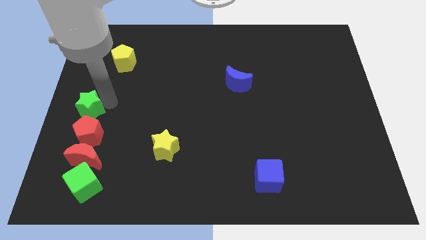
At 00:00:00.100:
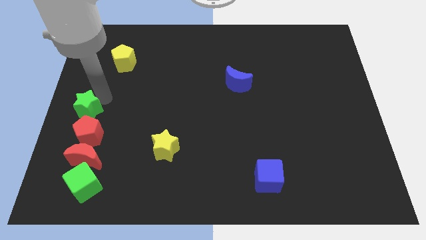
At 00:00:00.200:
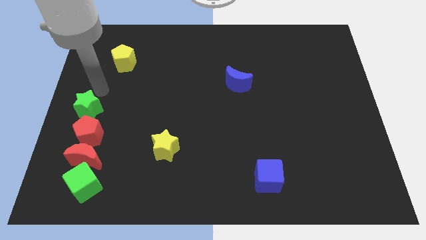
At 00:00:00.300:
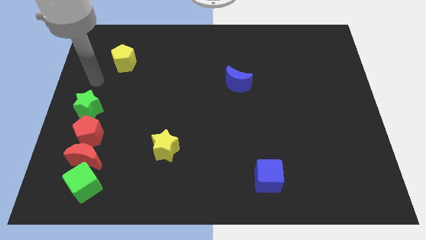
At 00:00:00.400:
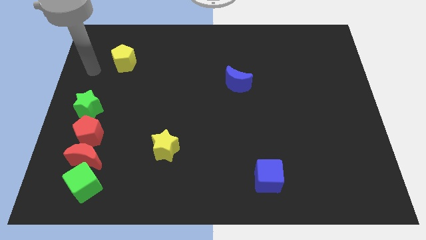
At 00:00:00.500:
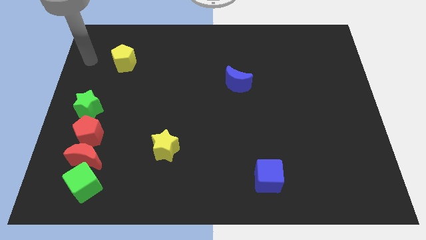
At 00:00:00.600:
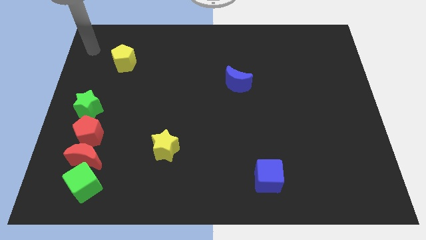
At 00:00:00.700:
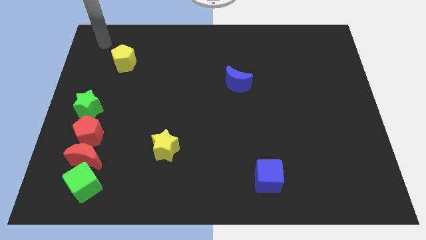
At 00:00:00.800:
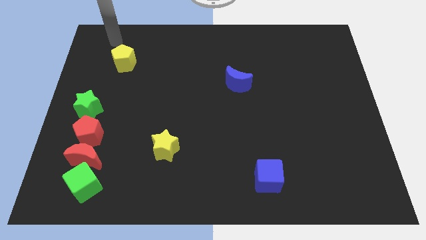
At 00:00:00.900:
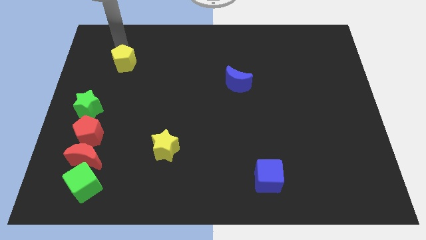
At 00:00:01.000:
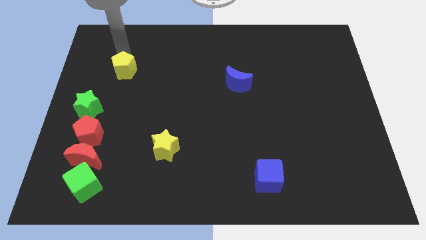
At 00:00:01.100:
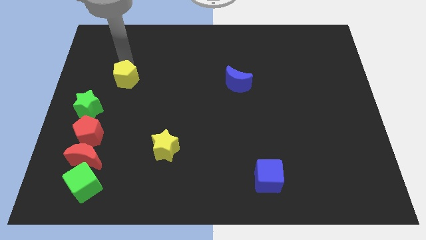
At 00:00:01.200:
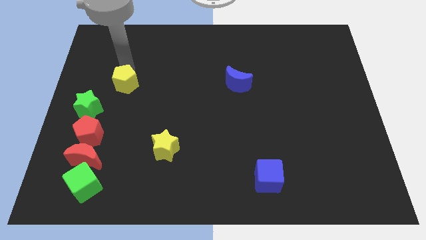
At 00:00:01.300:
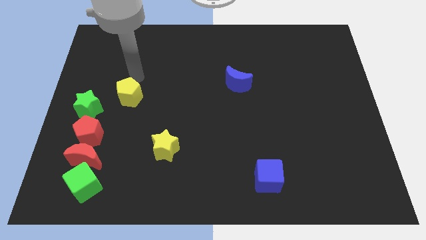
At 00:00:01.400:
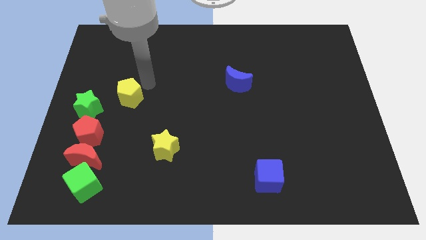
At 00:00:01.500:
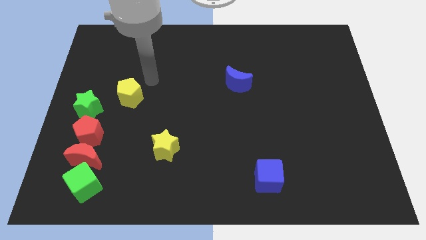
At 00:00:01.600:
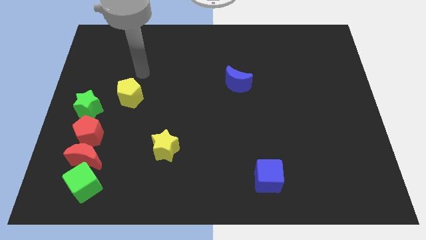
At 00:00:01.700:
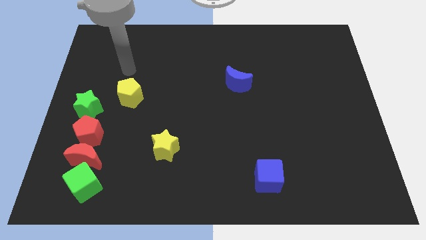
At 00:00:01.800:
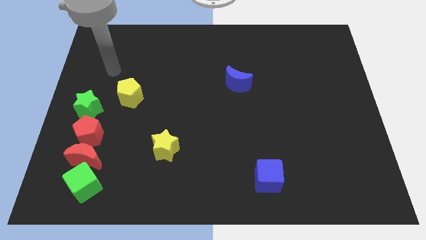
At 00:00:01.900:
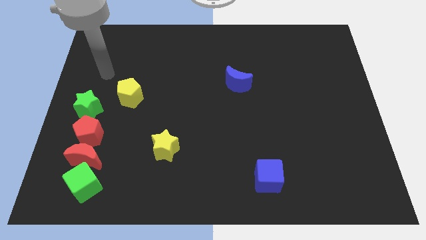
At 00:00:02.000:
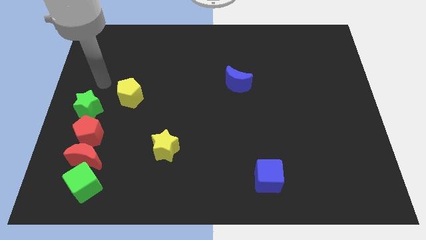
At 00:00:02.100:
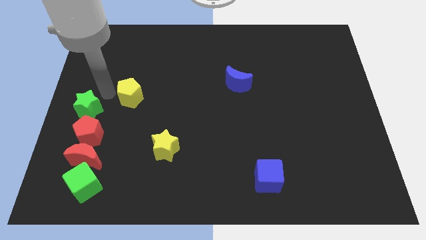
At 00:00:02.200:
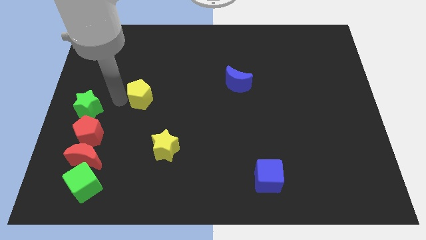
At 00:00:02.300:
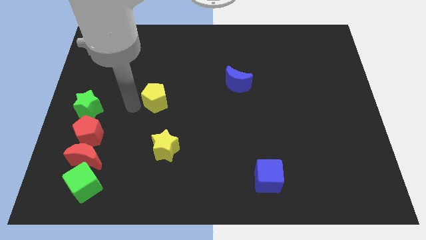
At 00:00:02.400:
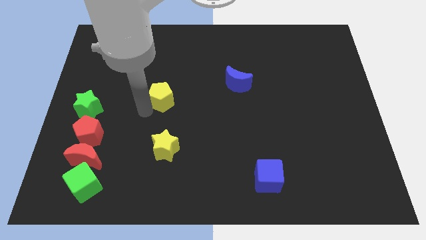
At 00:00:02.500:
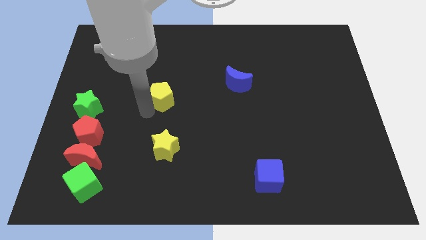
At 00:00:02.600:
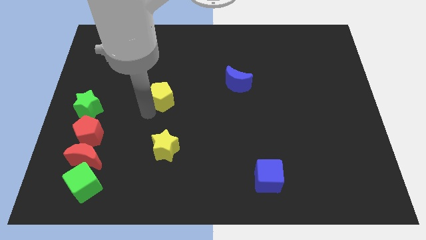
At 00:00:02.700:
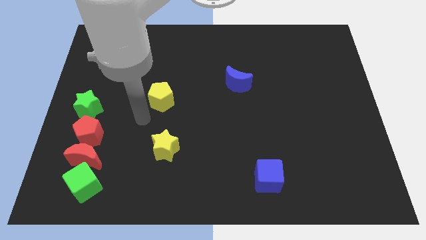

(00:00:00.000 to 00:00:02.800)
push the yellow pentagon to the top of the yellow star

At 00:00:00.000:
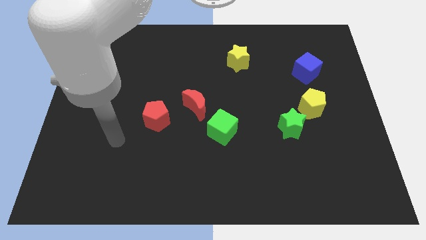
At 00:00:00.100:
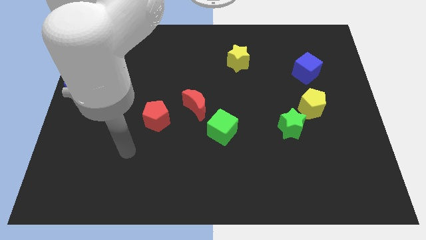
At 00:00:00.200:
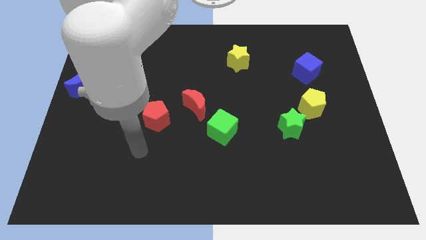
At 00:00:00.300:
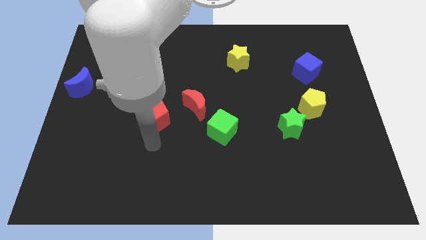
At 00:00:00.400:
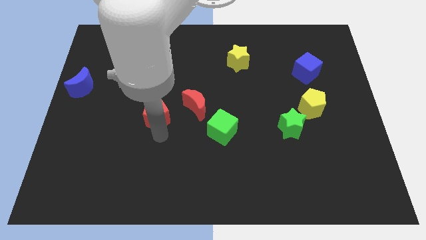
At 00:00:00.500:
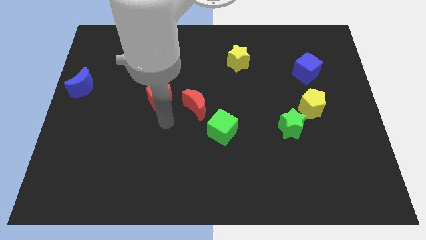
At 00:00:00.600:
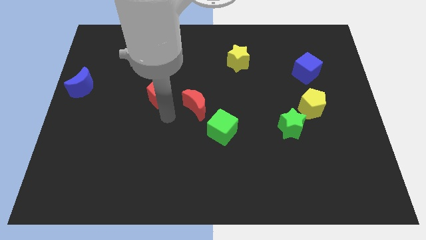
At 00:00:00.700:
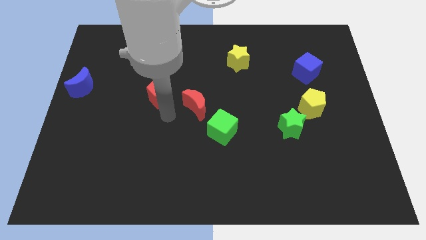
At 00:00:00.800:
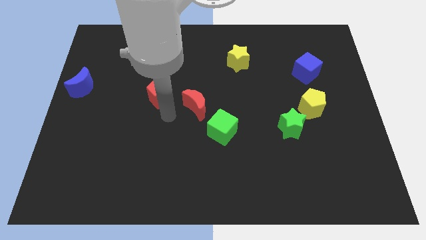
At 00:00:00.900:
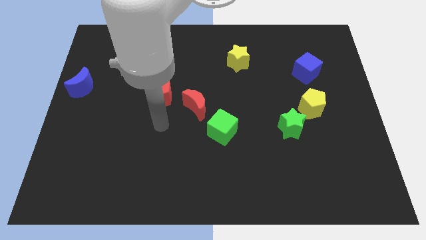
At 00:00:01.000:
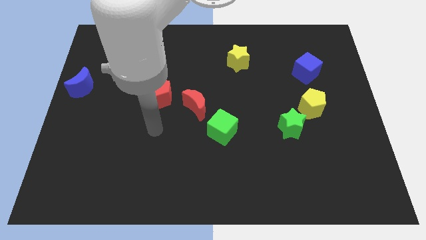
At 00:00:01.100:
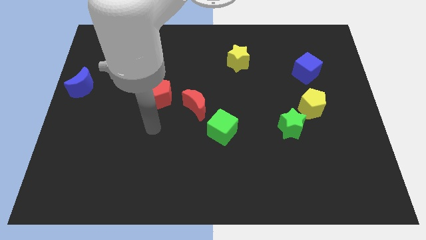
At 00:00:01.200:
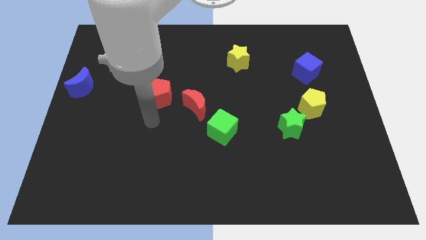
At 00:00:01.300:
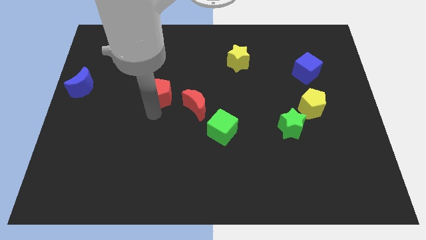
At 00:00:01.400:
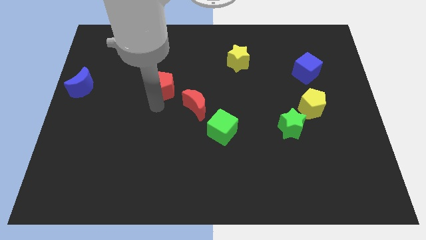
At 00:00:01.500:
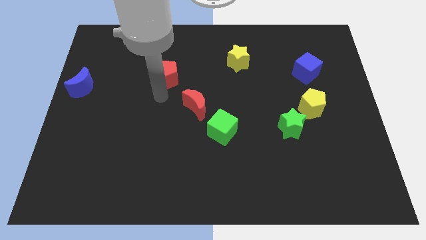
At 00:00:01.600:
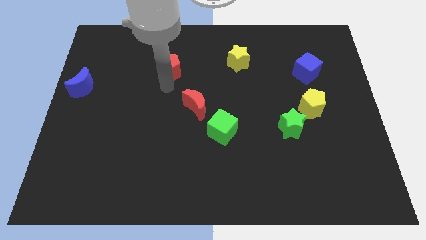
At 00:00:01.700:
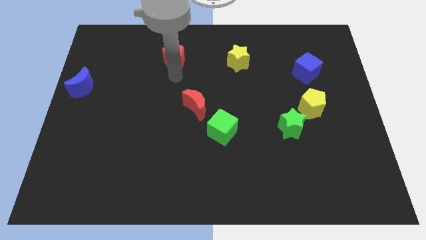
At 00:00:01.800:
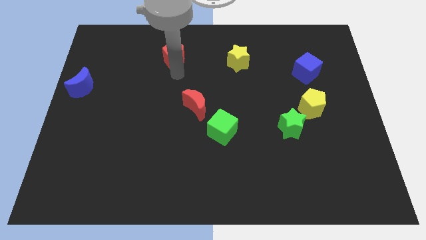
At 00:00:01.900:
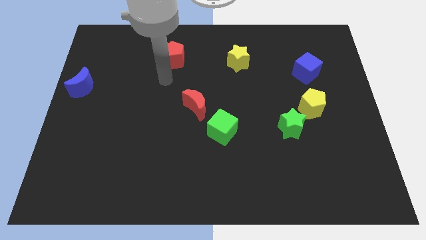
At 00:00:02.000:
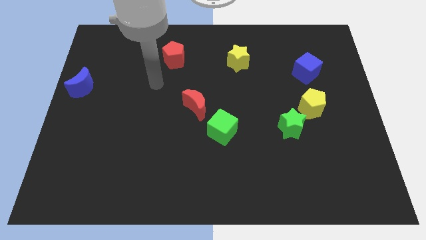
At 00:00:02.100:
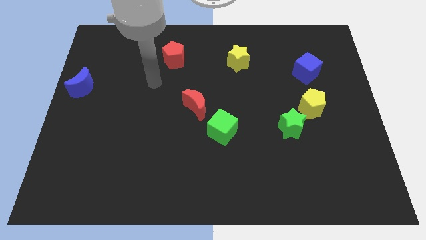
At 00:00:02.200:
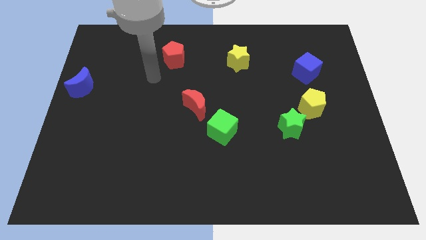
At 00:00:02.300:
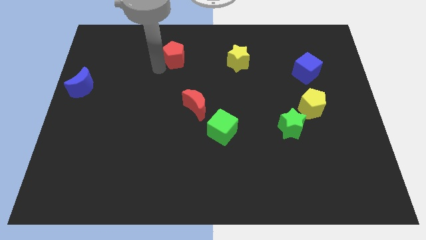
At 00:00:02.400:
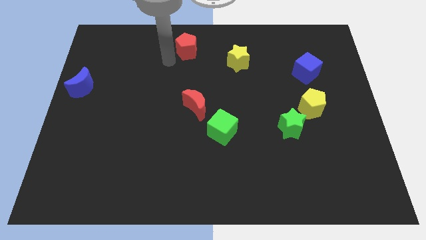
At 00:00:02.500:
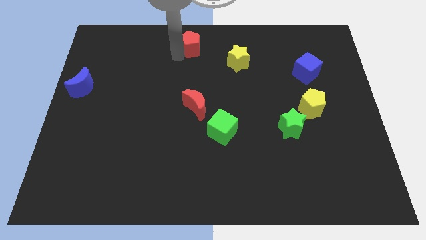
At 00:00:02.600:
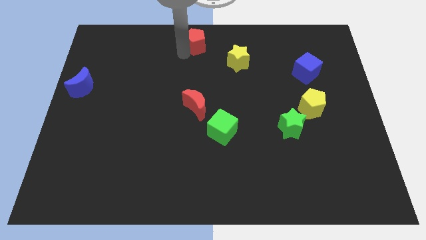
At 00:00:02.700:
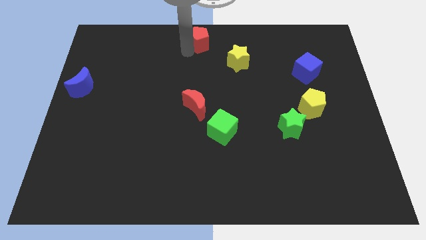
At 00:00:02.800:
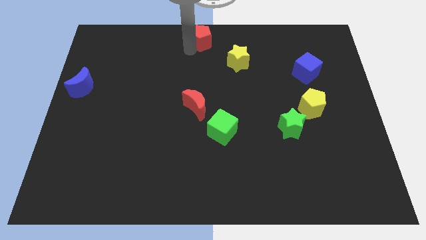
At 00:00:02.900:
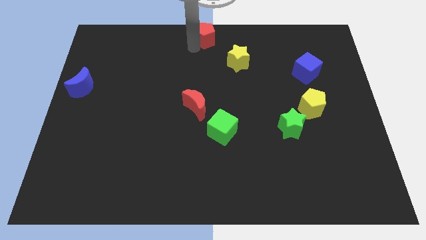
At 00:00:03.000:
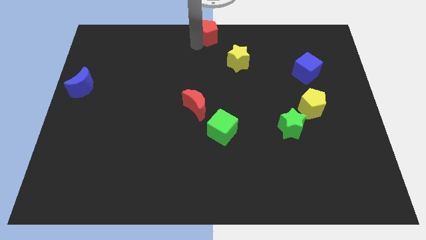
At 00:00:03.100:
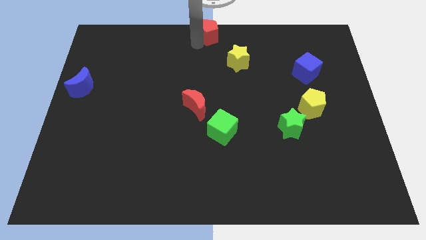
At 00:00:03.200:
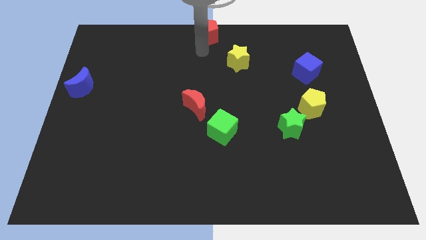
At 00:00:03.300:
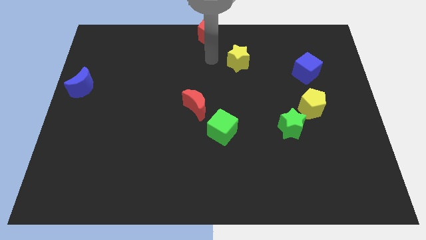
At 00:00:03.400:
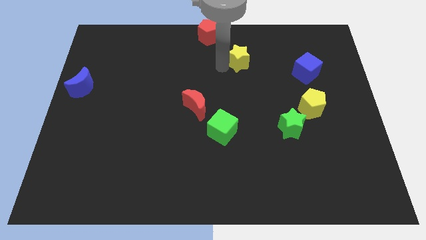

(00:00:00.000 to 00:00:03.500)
push the red pentagon to the top center

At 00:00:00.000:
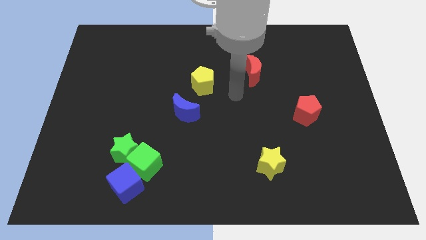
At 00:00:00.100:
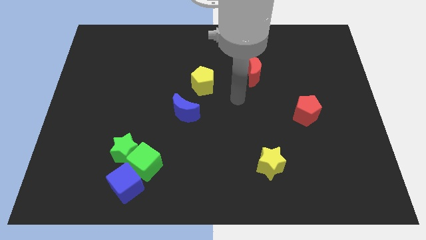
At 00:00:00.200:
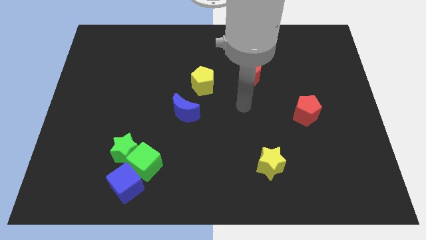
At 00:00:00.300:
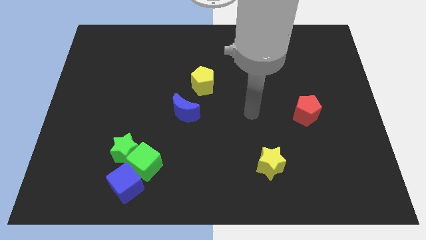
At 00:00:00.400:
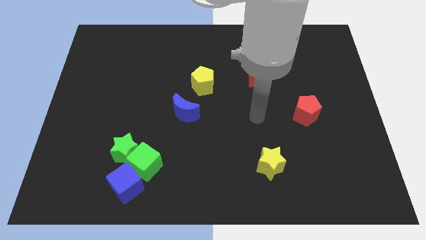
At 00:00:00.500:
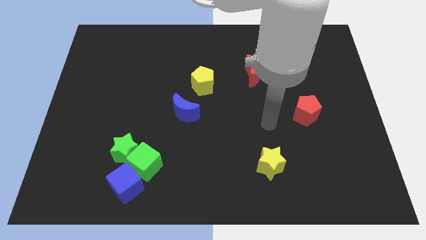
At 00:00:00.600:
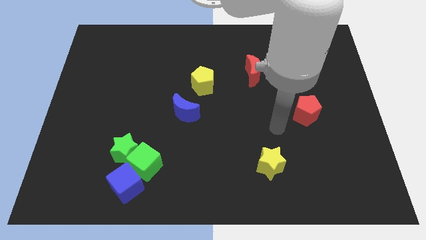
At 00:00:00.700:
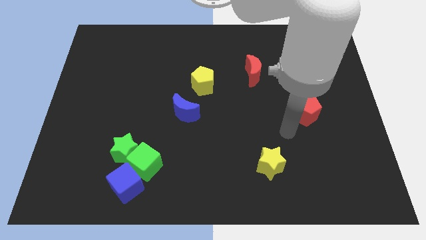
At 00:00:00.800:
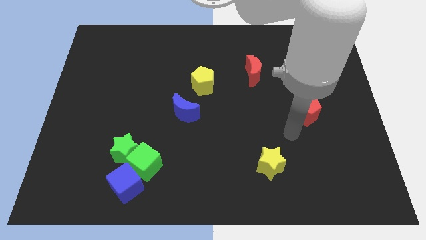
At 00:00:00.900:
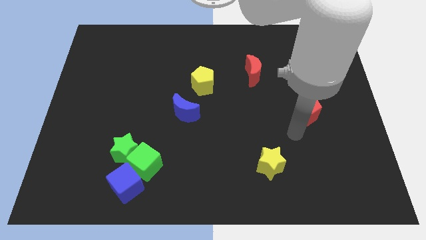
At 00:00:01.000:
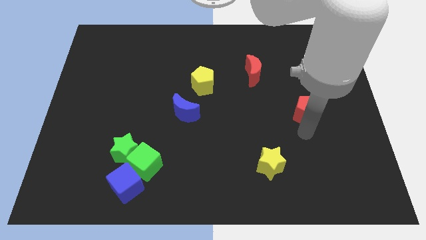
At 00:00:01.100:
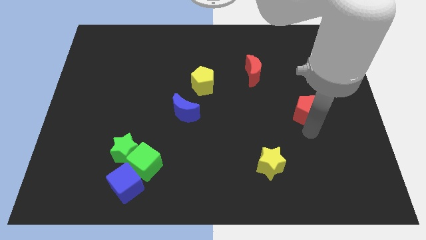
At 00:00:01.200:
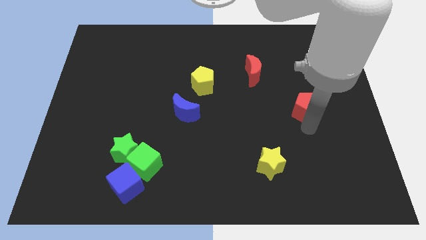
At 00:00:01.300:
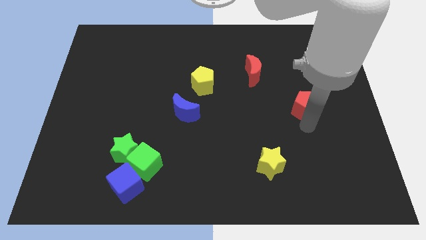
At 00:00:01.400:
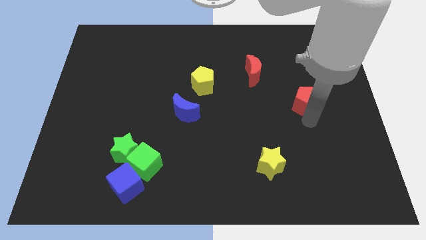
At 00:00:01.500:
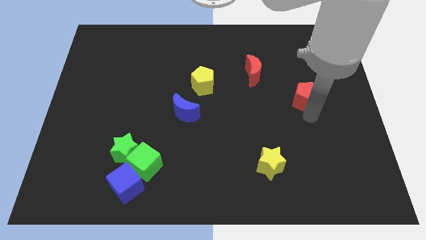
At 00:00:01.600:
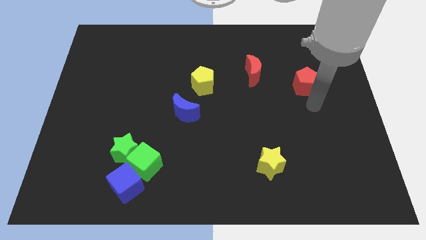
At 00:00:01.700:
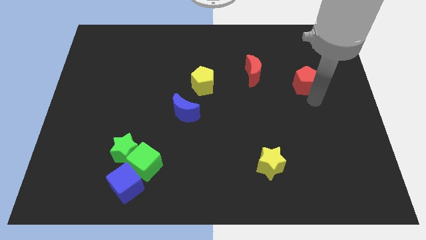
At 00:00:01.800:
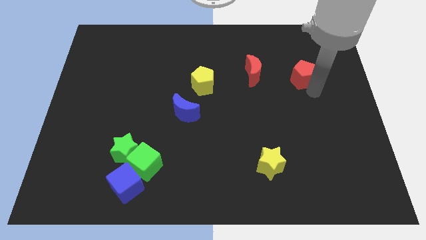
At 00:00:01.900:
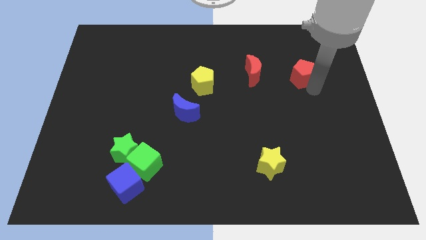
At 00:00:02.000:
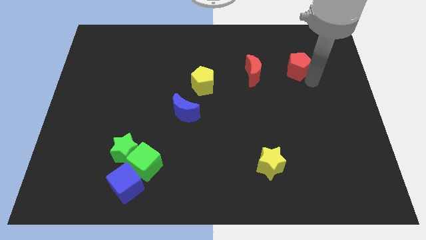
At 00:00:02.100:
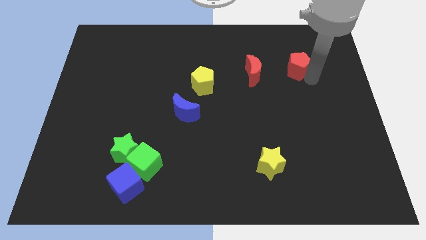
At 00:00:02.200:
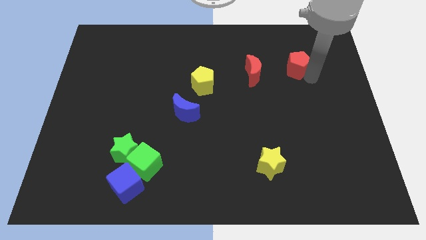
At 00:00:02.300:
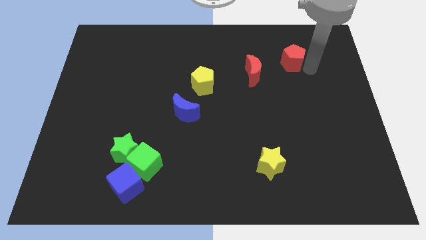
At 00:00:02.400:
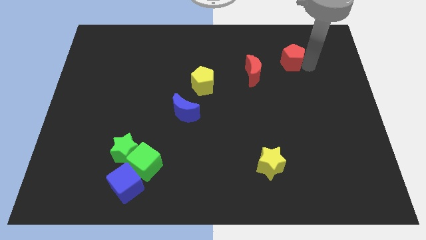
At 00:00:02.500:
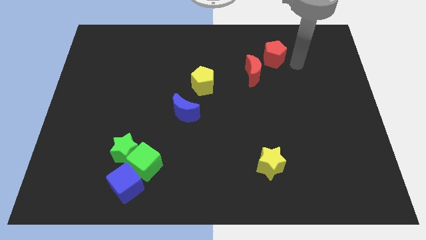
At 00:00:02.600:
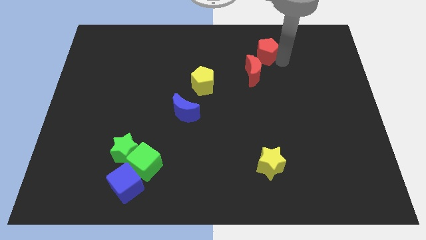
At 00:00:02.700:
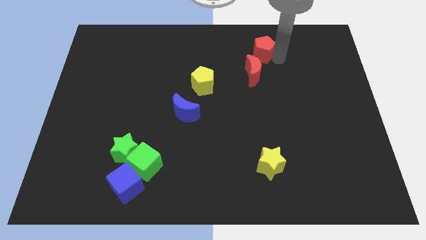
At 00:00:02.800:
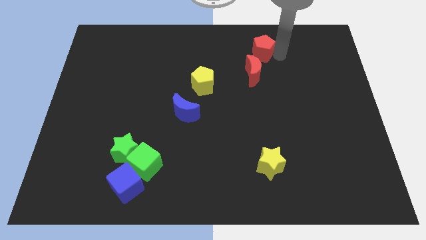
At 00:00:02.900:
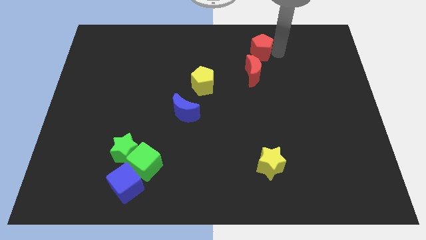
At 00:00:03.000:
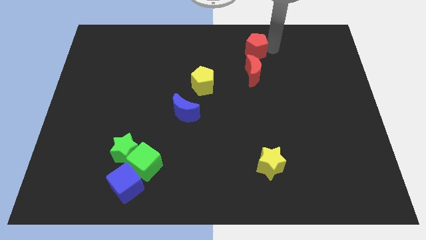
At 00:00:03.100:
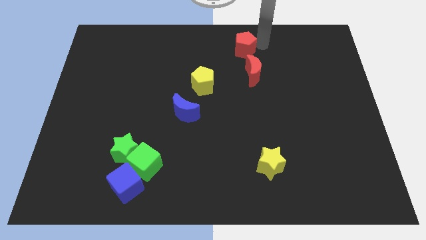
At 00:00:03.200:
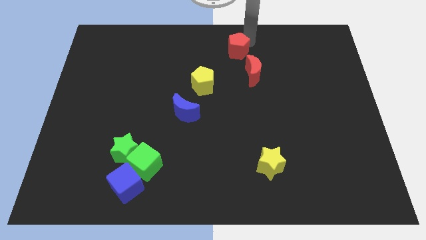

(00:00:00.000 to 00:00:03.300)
move the red pentagon above the red crescent
